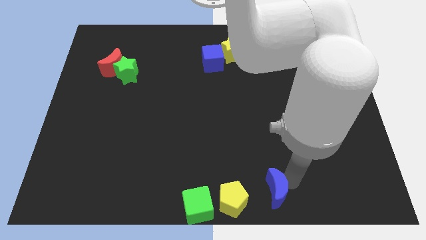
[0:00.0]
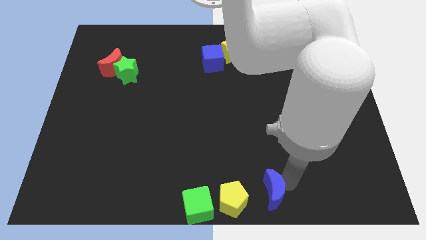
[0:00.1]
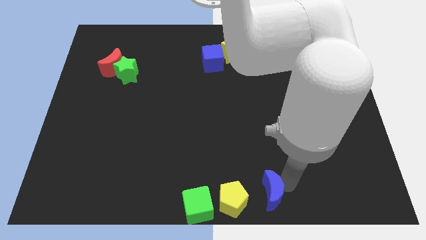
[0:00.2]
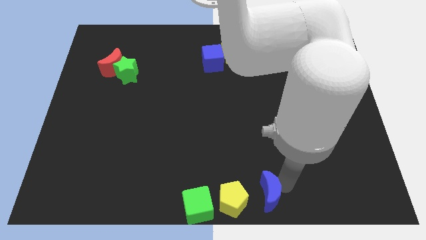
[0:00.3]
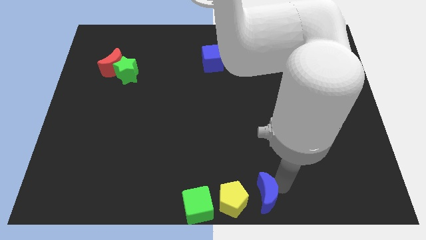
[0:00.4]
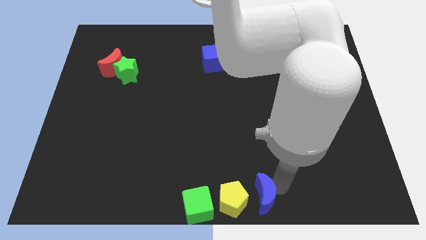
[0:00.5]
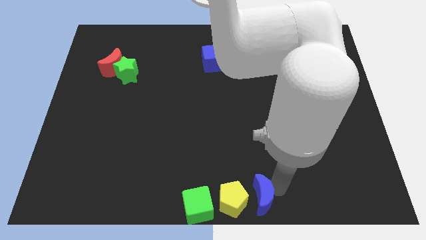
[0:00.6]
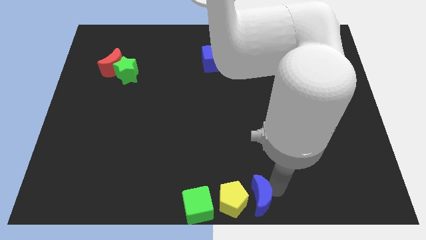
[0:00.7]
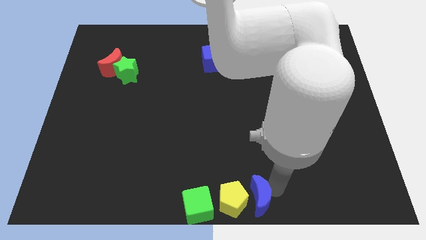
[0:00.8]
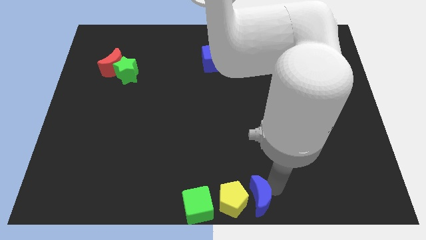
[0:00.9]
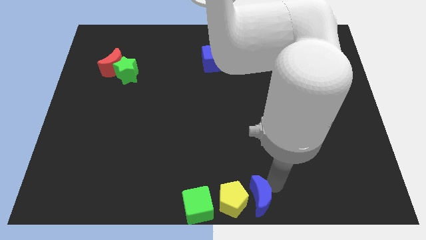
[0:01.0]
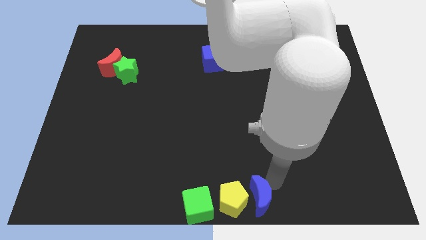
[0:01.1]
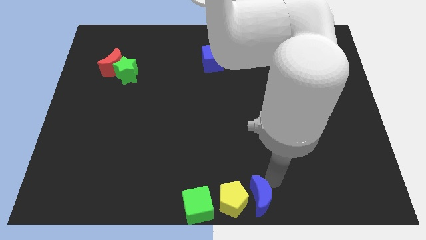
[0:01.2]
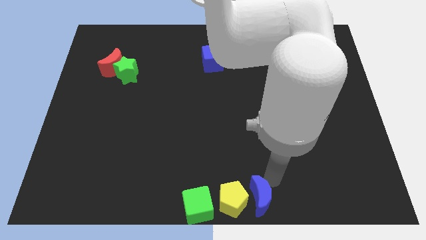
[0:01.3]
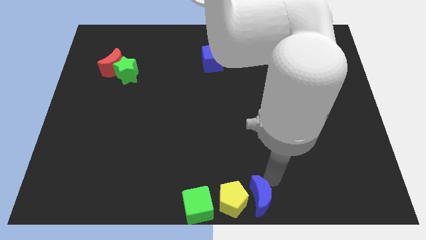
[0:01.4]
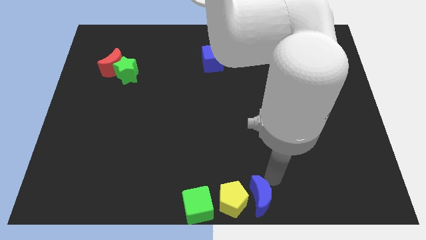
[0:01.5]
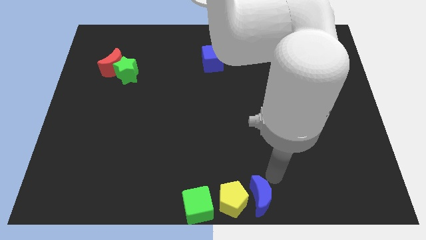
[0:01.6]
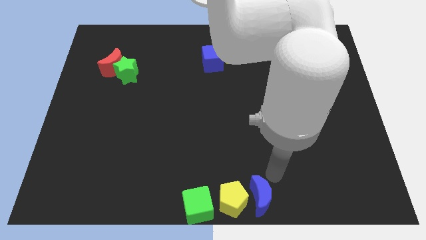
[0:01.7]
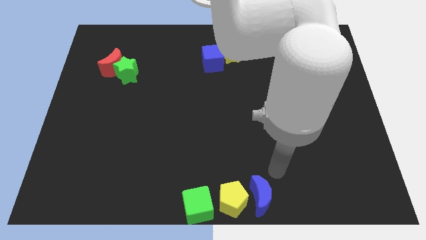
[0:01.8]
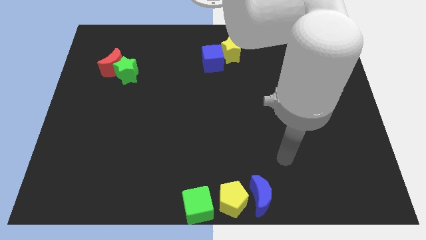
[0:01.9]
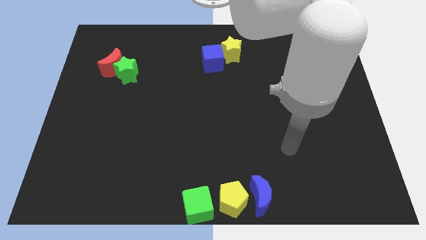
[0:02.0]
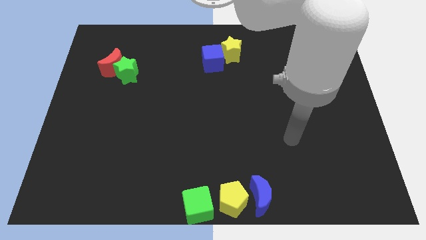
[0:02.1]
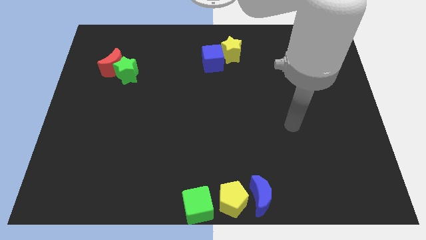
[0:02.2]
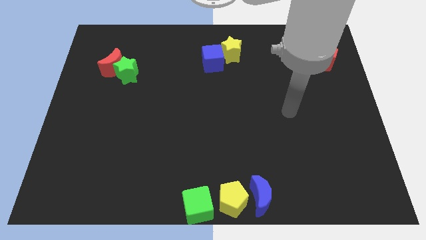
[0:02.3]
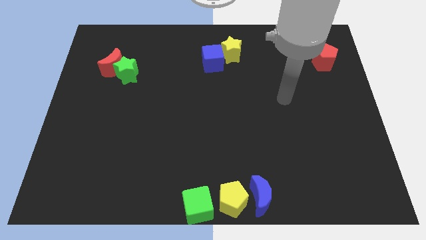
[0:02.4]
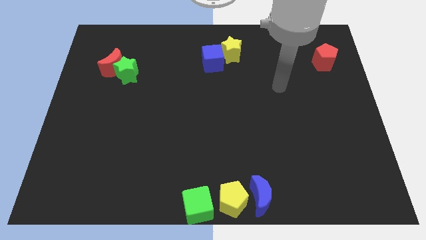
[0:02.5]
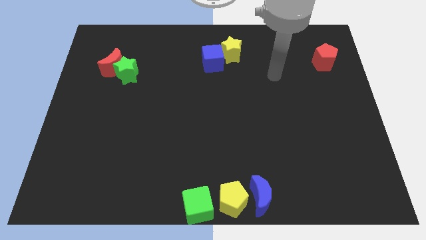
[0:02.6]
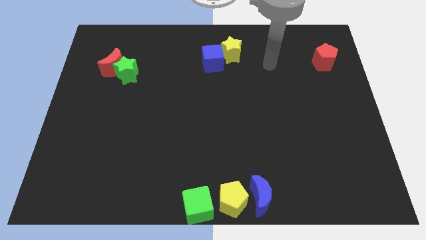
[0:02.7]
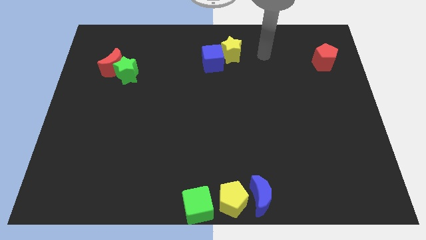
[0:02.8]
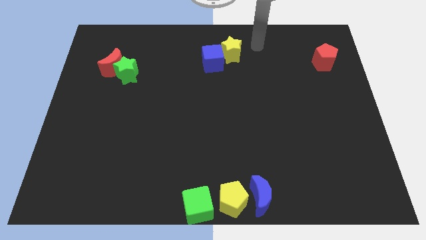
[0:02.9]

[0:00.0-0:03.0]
move your arm away from the blue moon

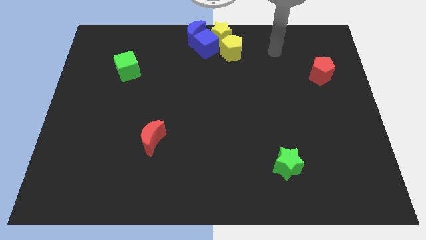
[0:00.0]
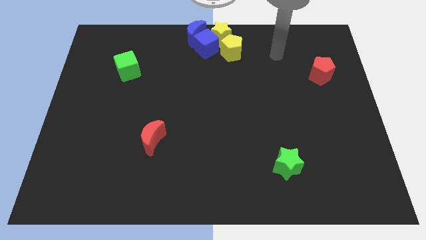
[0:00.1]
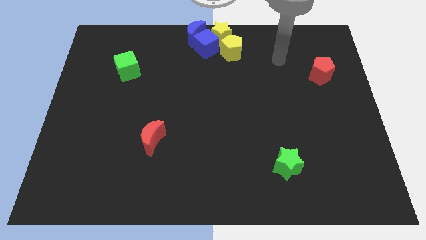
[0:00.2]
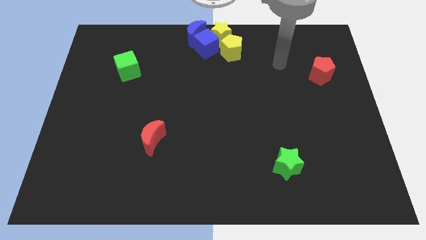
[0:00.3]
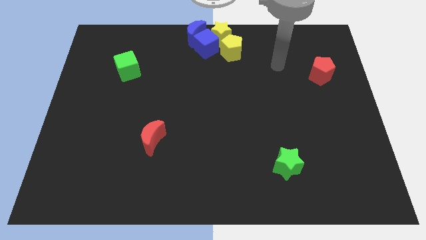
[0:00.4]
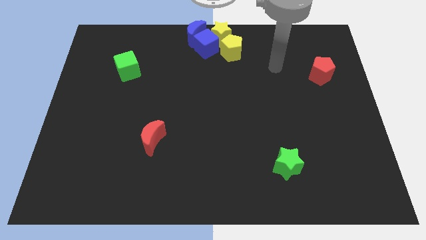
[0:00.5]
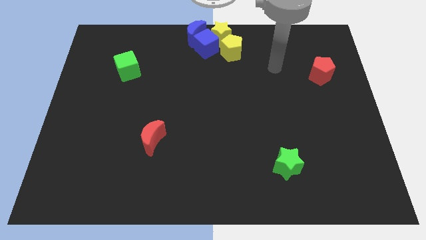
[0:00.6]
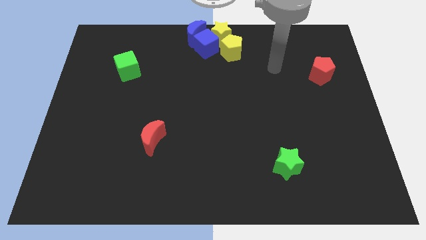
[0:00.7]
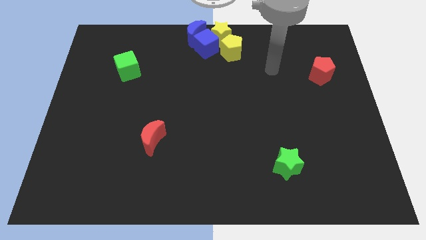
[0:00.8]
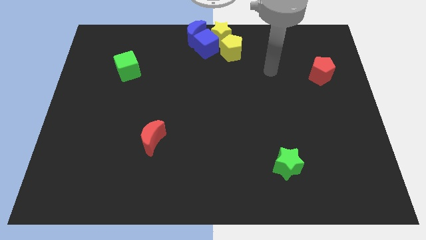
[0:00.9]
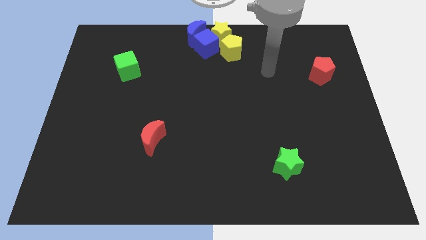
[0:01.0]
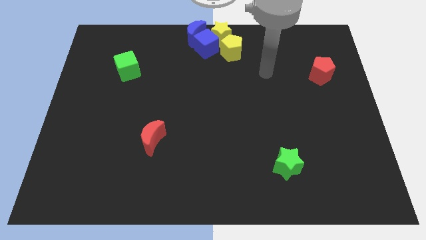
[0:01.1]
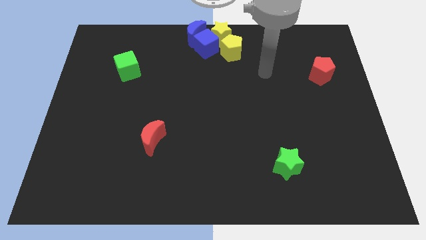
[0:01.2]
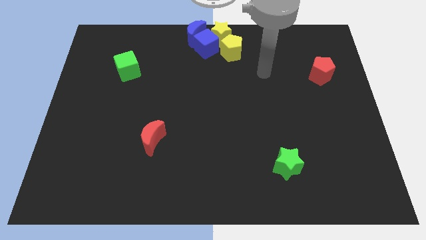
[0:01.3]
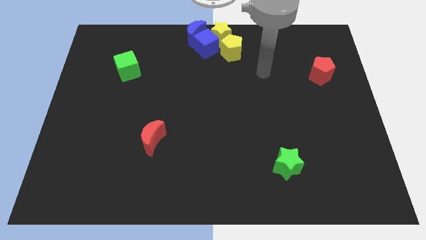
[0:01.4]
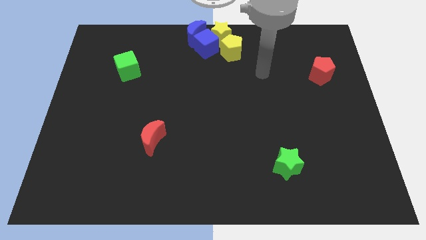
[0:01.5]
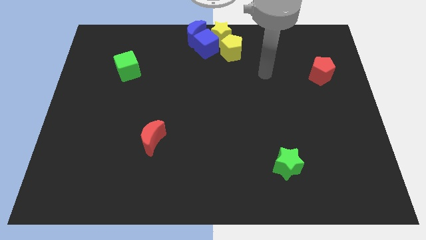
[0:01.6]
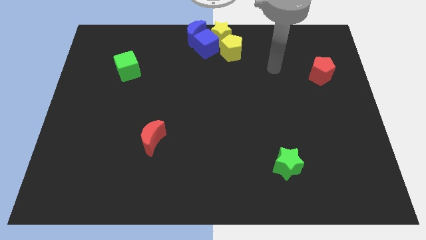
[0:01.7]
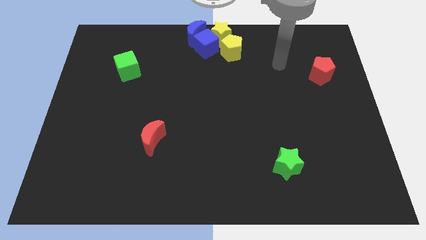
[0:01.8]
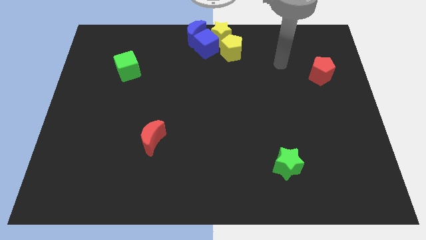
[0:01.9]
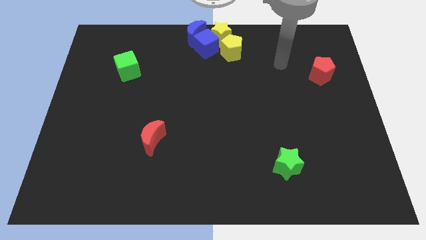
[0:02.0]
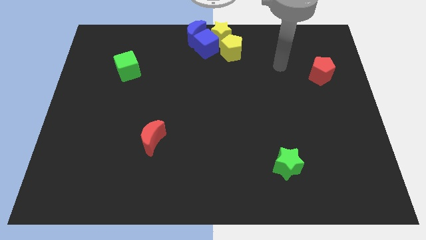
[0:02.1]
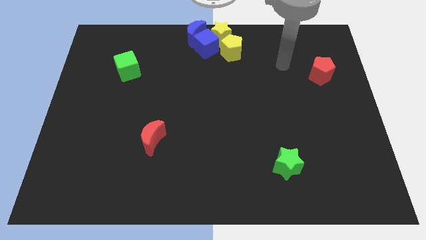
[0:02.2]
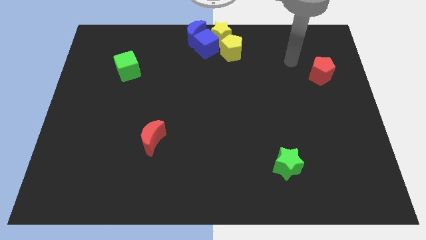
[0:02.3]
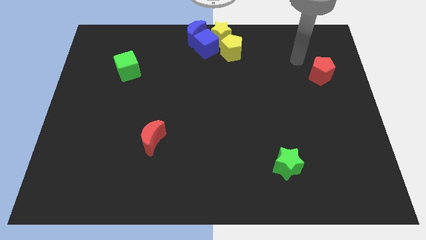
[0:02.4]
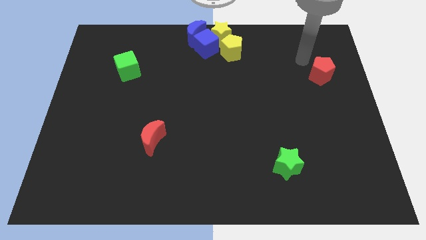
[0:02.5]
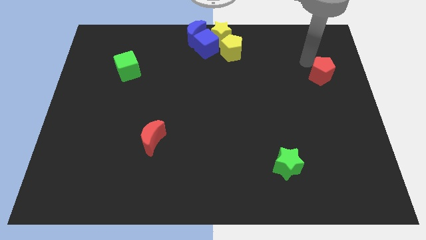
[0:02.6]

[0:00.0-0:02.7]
move your arm towards red pentagon

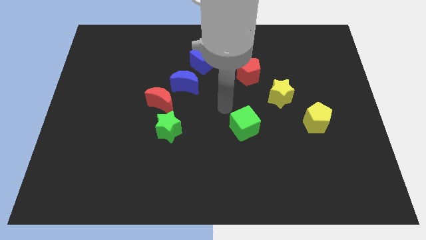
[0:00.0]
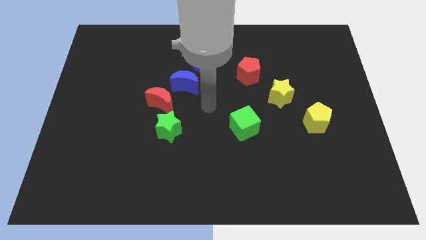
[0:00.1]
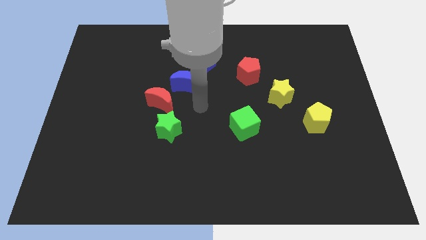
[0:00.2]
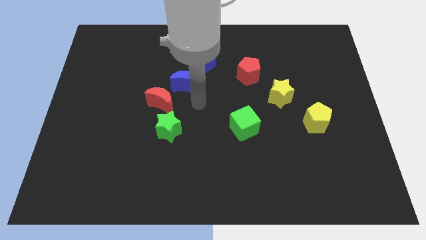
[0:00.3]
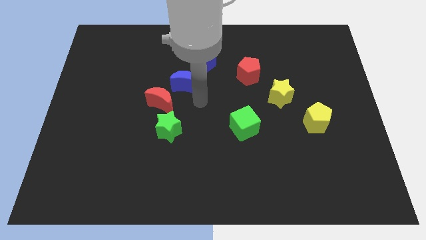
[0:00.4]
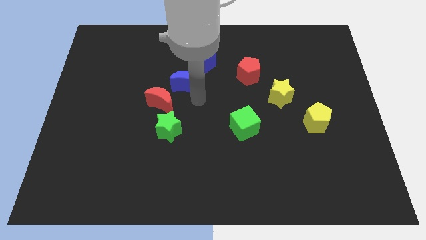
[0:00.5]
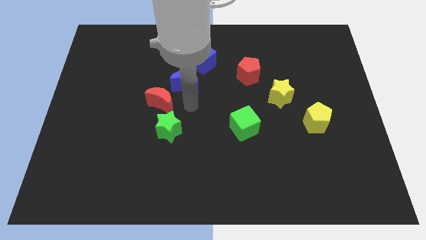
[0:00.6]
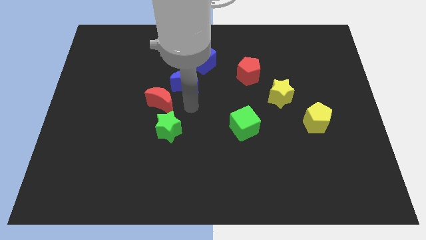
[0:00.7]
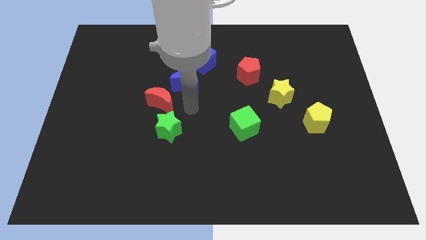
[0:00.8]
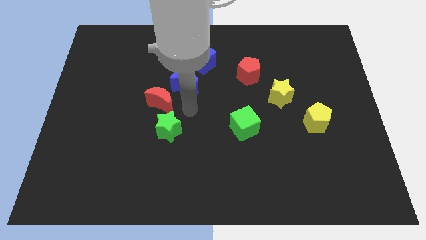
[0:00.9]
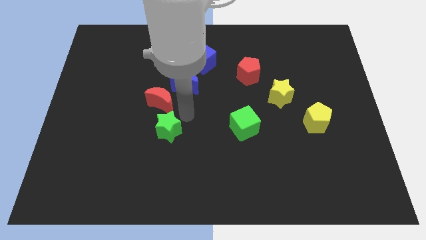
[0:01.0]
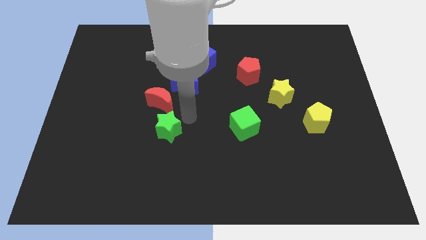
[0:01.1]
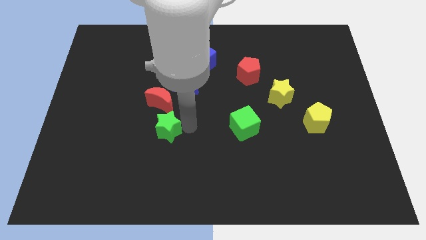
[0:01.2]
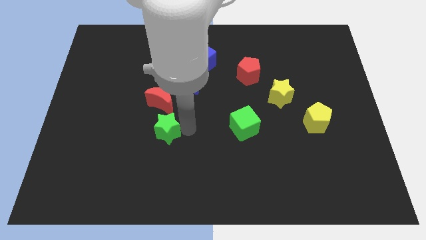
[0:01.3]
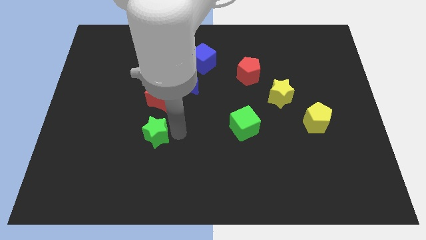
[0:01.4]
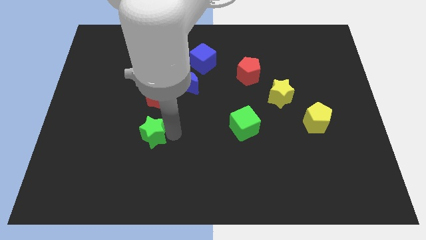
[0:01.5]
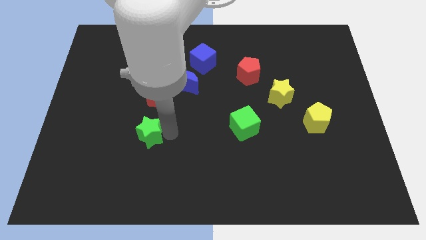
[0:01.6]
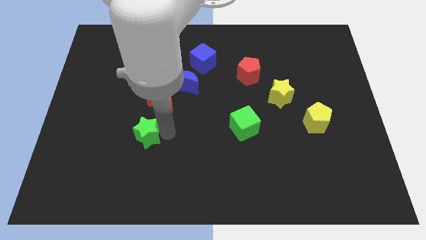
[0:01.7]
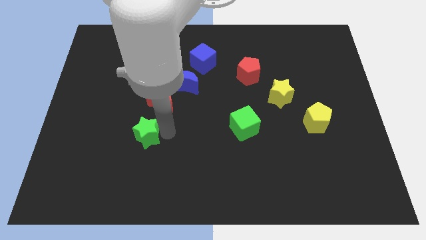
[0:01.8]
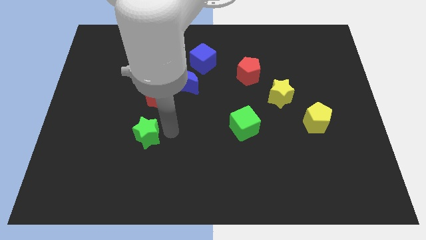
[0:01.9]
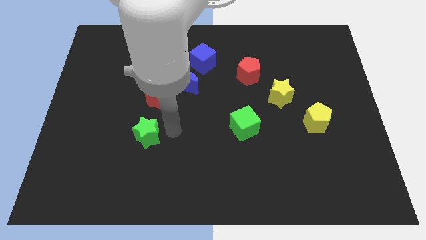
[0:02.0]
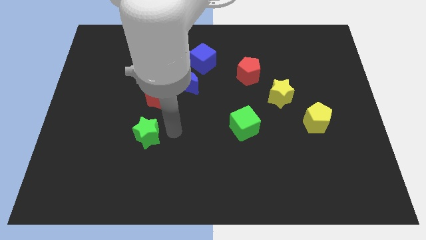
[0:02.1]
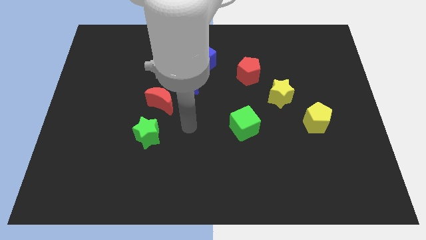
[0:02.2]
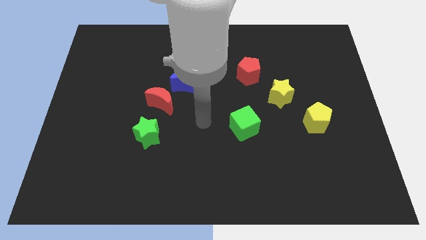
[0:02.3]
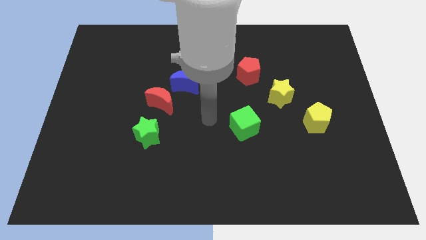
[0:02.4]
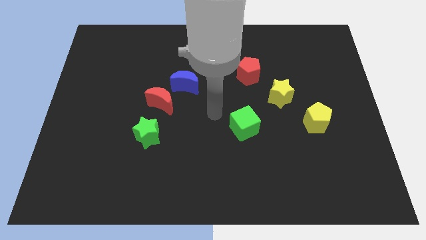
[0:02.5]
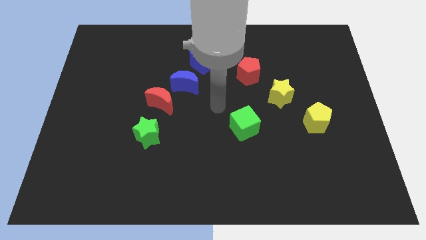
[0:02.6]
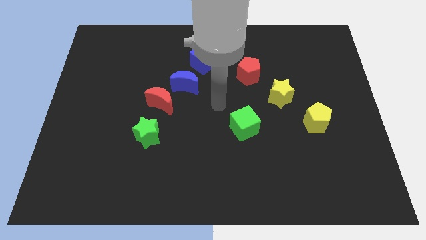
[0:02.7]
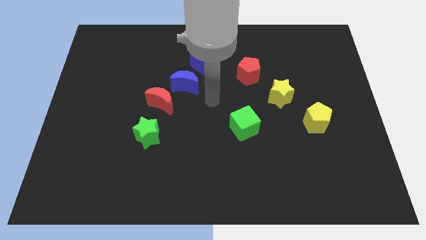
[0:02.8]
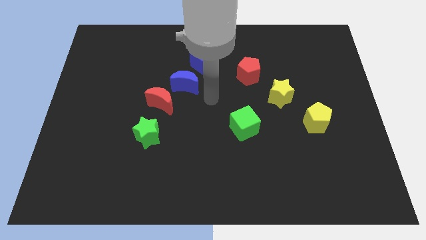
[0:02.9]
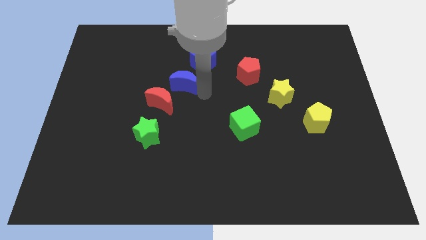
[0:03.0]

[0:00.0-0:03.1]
move the green star to the bottom of the red crescent
